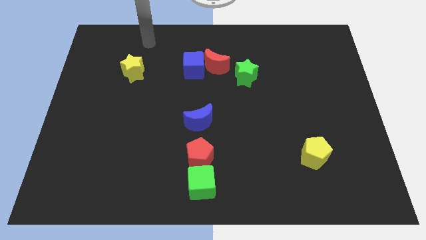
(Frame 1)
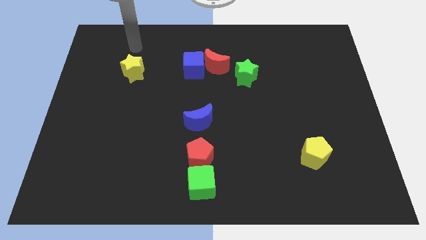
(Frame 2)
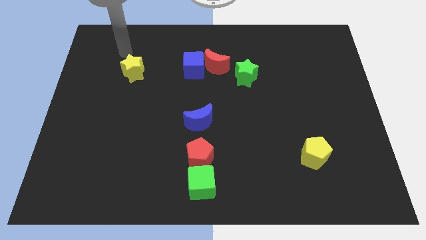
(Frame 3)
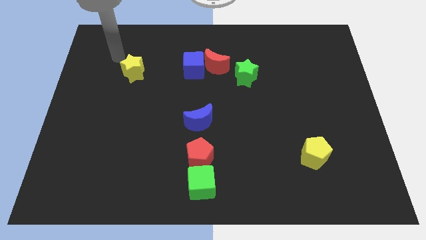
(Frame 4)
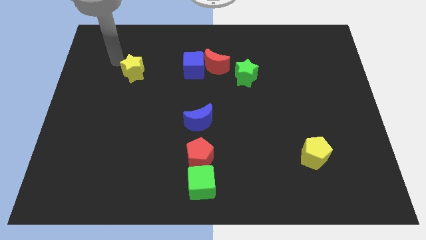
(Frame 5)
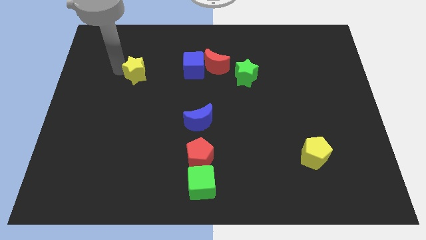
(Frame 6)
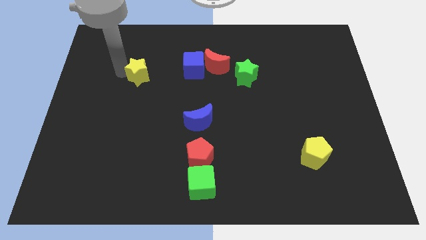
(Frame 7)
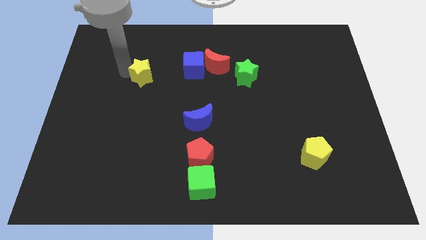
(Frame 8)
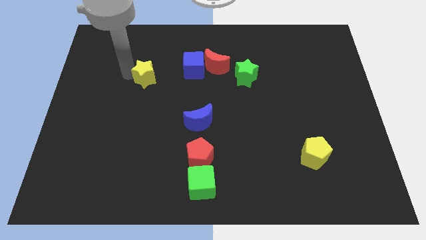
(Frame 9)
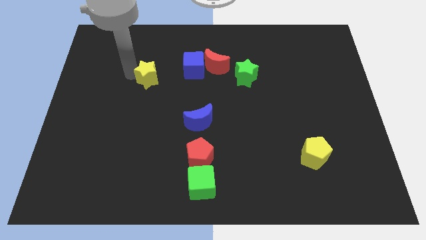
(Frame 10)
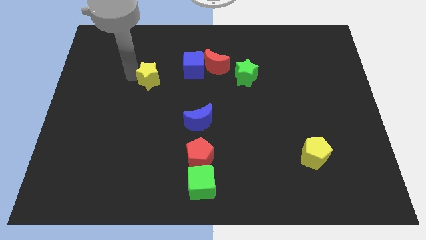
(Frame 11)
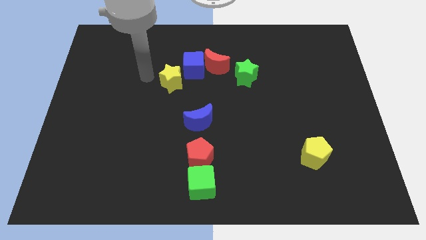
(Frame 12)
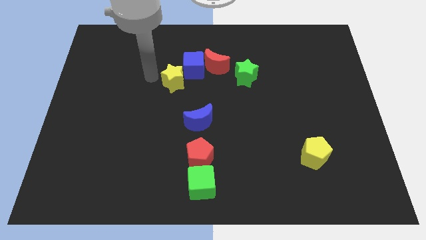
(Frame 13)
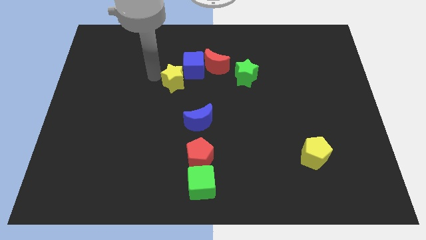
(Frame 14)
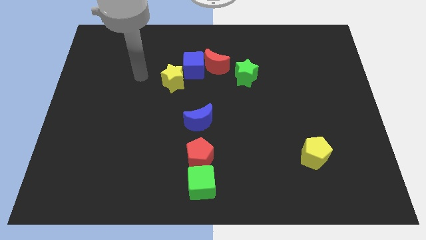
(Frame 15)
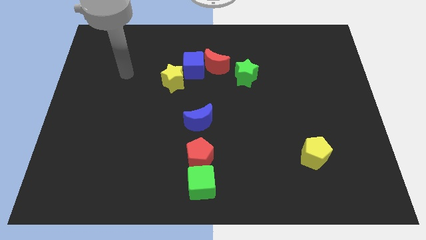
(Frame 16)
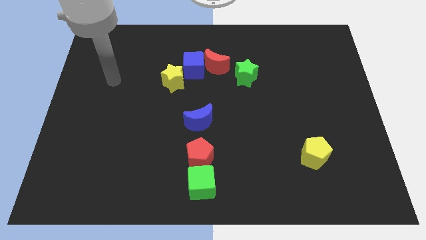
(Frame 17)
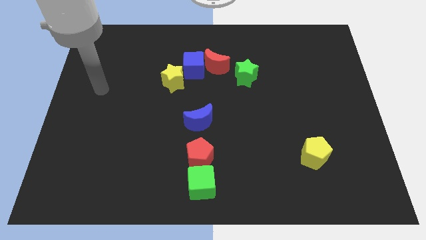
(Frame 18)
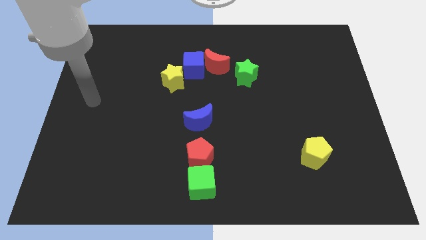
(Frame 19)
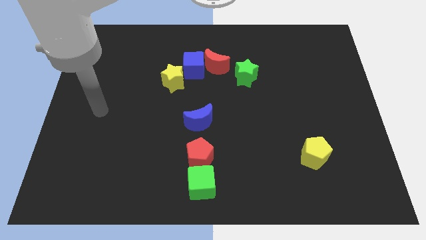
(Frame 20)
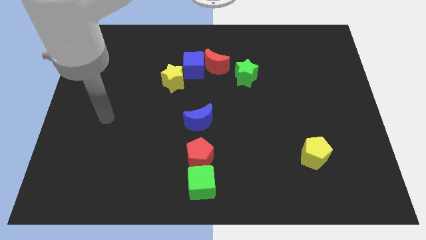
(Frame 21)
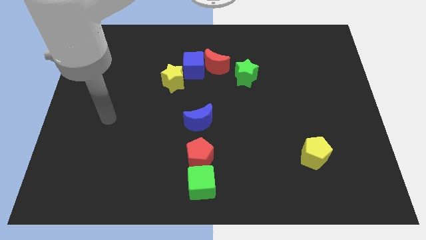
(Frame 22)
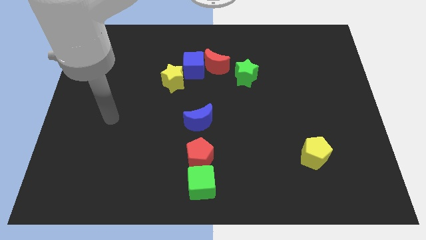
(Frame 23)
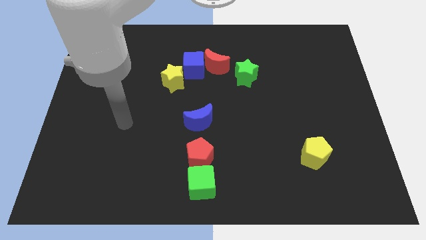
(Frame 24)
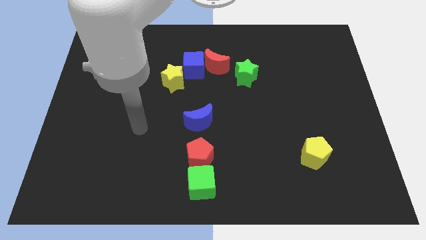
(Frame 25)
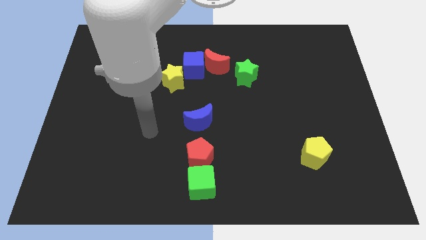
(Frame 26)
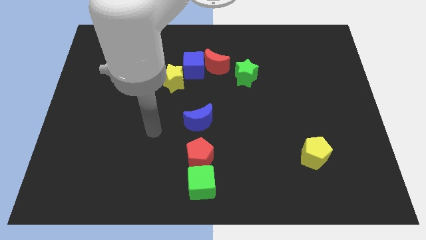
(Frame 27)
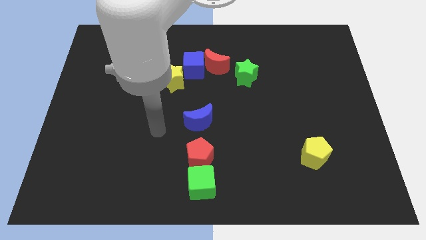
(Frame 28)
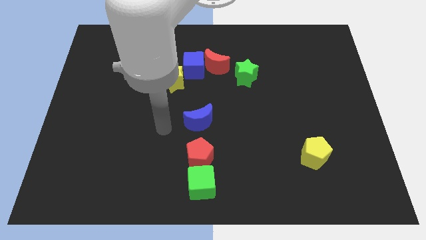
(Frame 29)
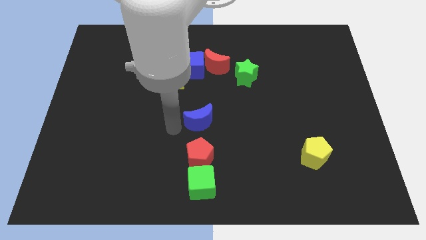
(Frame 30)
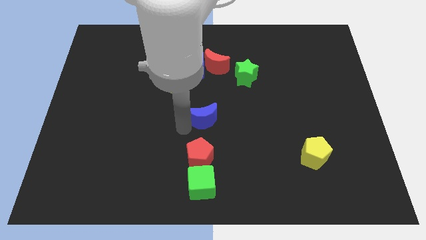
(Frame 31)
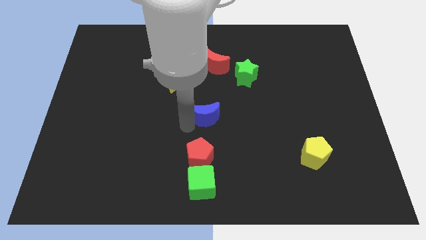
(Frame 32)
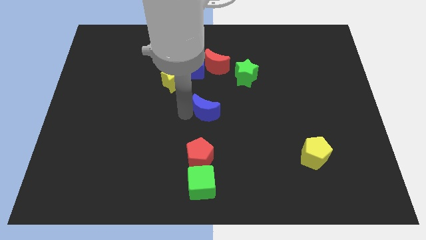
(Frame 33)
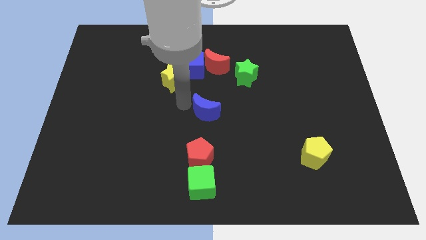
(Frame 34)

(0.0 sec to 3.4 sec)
move the yellow star near the blue cube

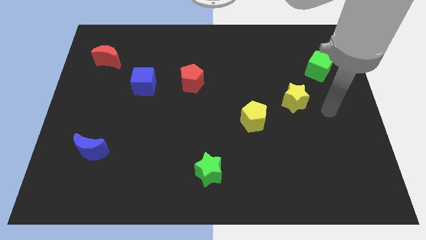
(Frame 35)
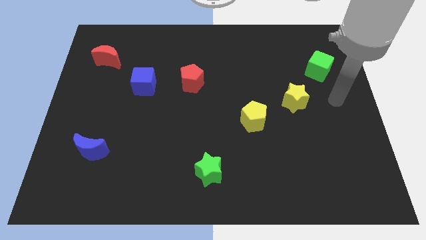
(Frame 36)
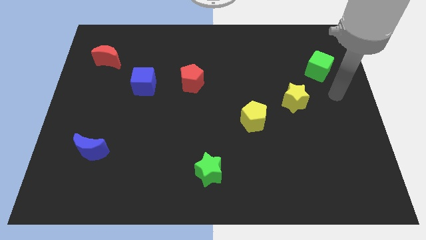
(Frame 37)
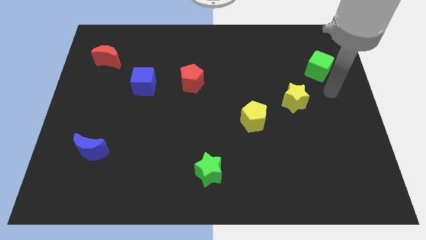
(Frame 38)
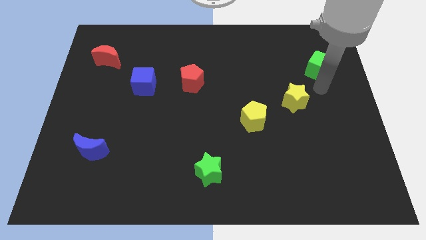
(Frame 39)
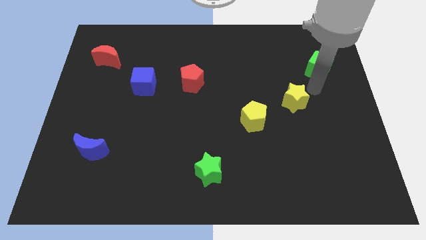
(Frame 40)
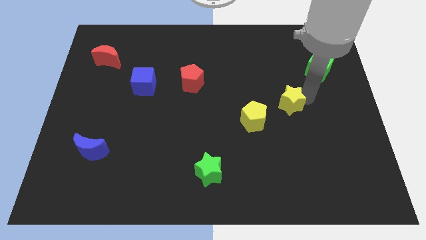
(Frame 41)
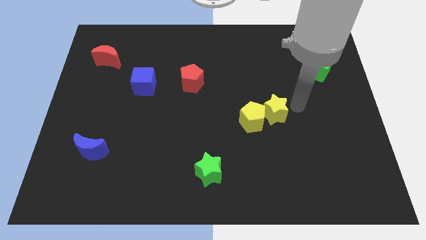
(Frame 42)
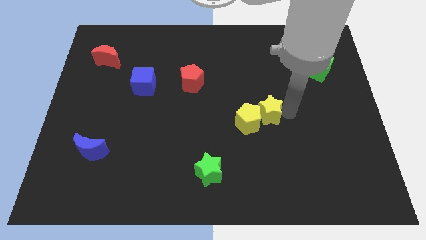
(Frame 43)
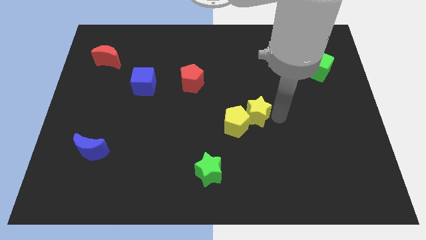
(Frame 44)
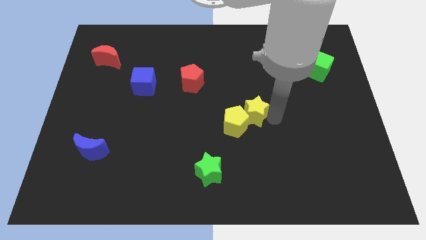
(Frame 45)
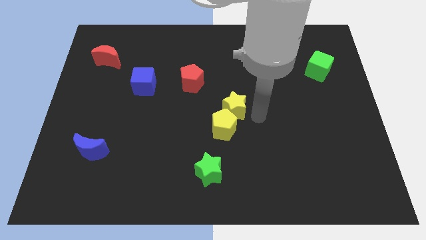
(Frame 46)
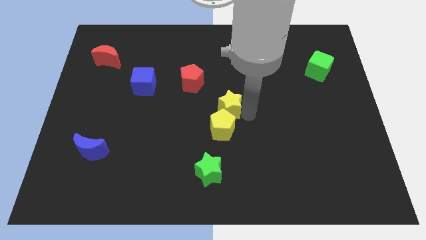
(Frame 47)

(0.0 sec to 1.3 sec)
push yellow star in yellow pentagon

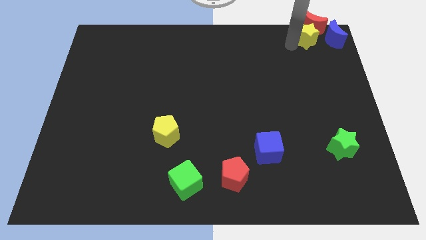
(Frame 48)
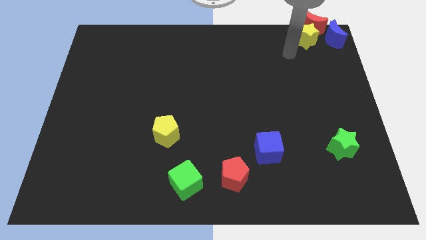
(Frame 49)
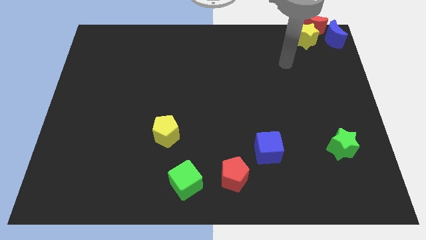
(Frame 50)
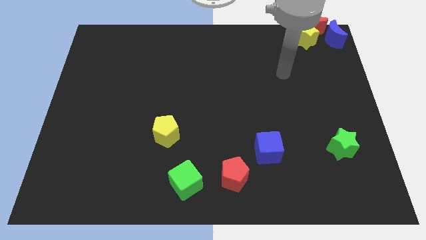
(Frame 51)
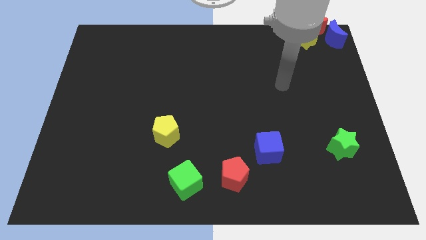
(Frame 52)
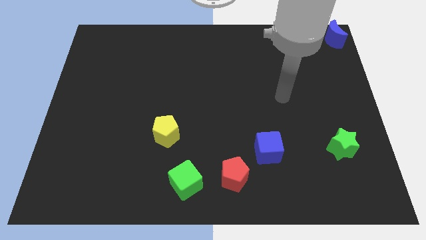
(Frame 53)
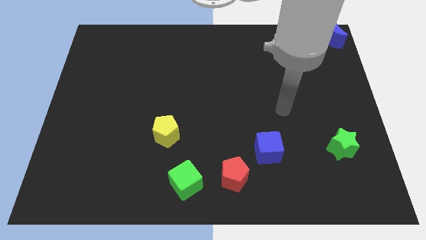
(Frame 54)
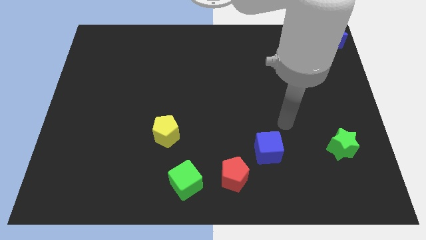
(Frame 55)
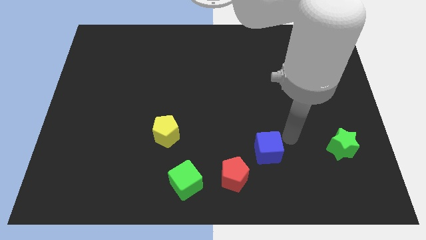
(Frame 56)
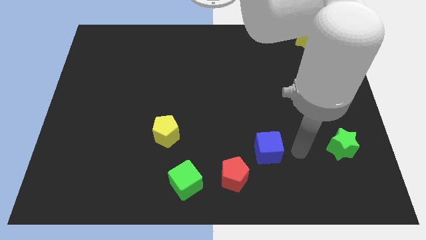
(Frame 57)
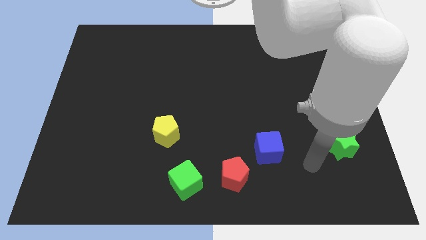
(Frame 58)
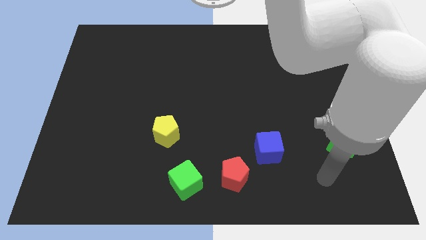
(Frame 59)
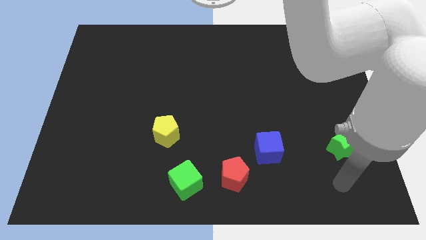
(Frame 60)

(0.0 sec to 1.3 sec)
point your arm at the bottom of the green star

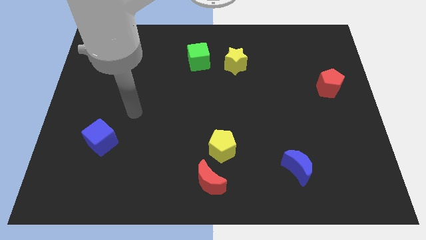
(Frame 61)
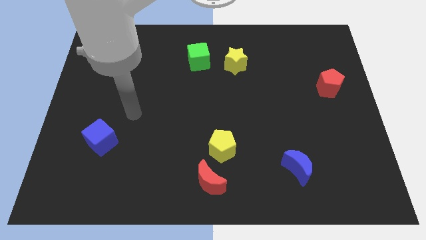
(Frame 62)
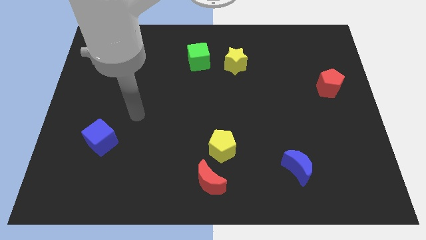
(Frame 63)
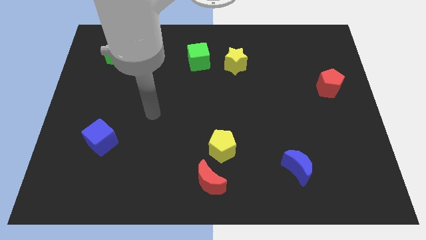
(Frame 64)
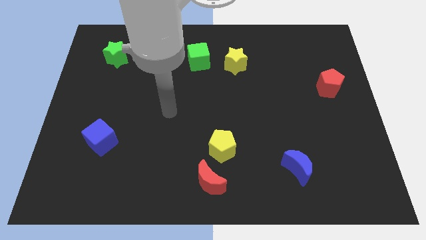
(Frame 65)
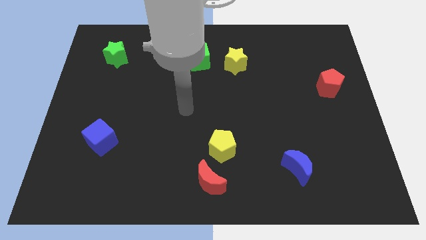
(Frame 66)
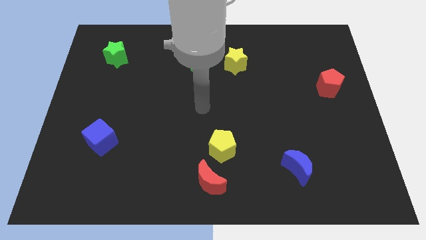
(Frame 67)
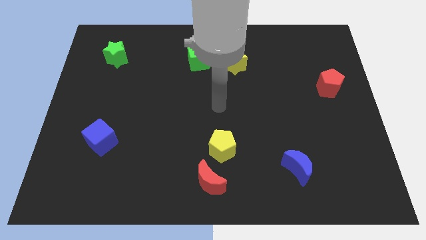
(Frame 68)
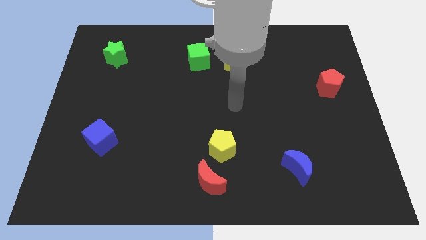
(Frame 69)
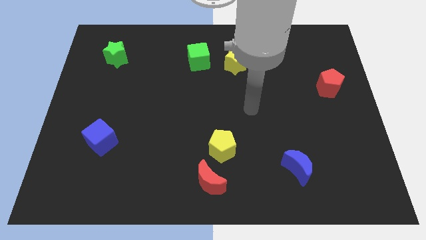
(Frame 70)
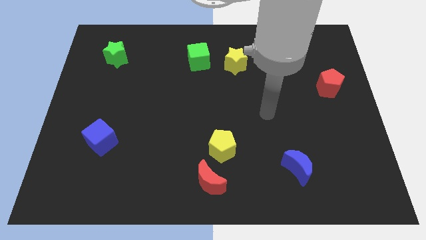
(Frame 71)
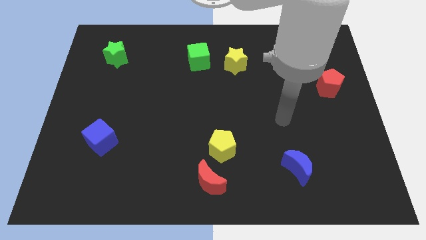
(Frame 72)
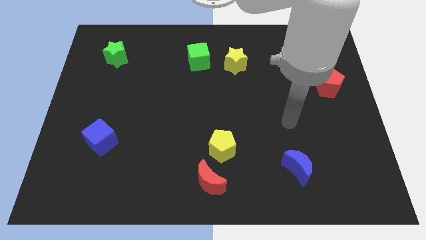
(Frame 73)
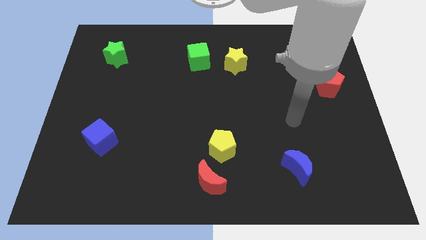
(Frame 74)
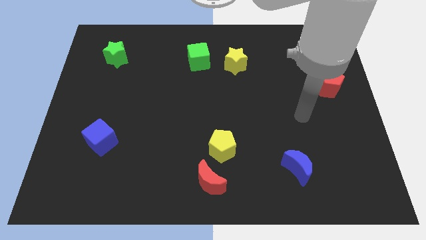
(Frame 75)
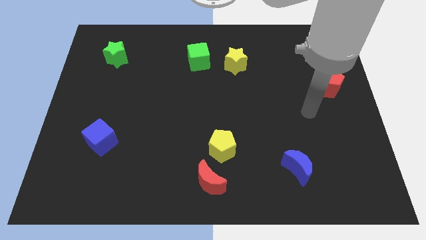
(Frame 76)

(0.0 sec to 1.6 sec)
place your arm to the bottom left side of the red pentagon

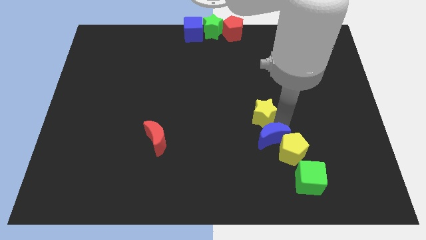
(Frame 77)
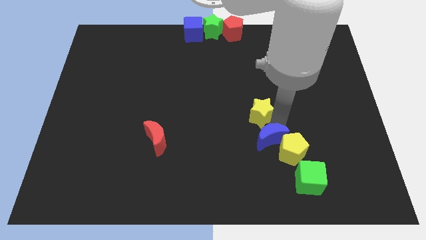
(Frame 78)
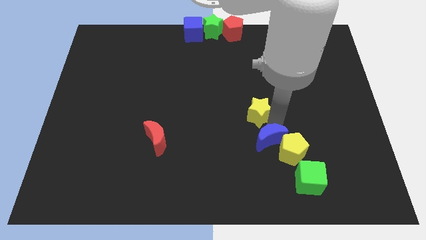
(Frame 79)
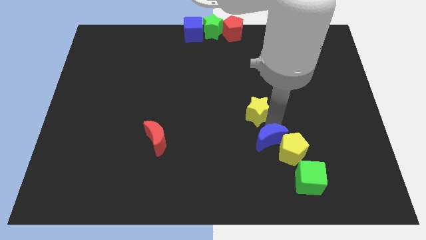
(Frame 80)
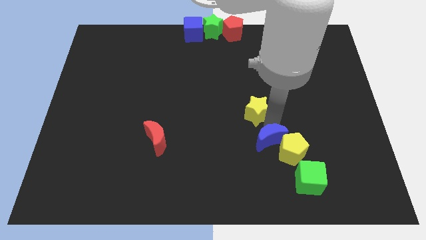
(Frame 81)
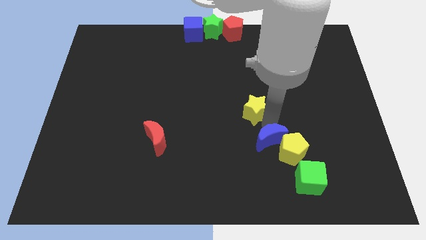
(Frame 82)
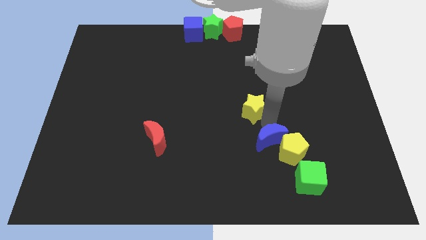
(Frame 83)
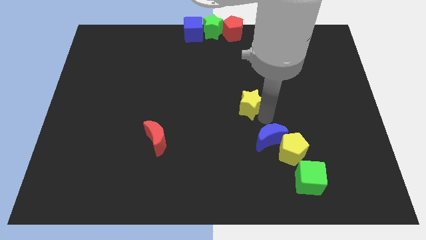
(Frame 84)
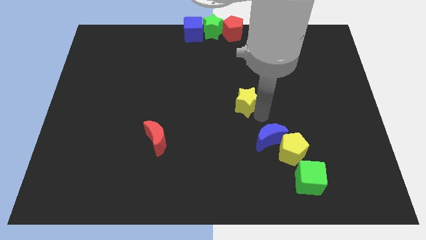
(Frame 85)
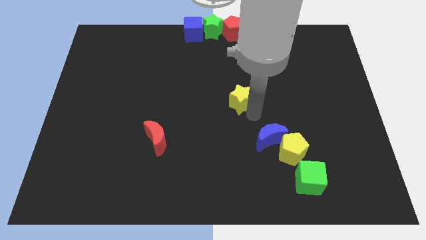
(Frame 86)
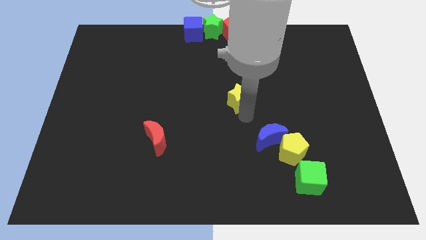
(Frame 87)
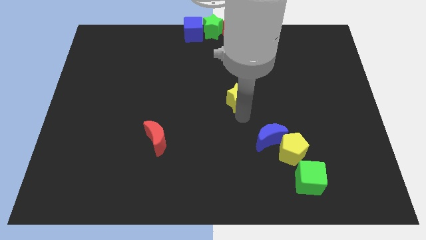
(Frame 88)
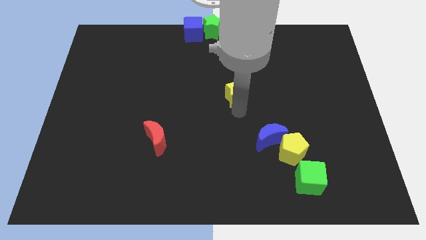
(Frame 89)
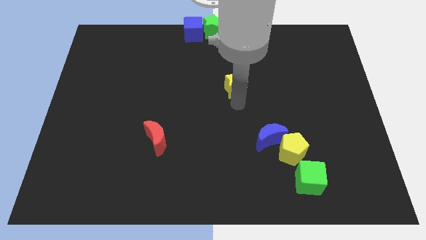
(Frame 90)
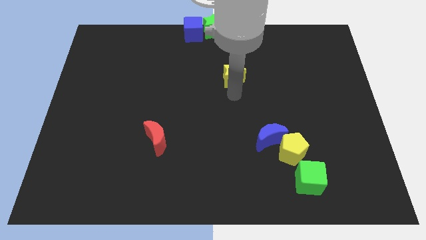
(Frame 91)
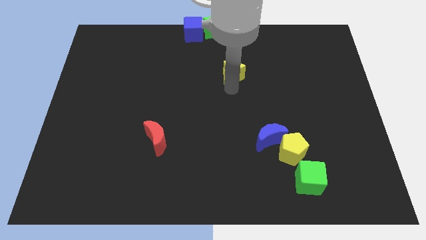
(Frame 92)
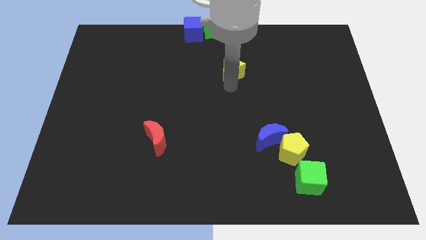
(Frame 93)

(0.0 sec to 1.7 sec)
push the yellow star towards the top side of the board
